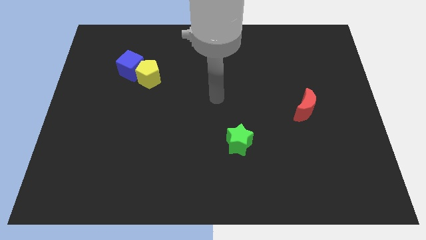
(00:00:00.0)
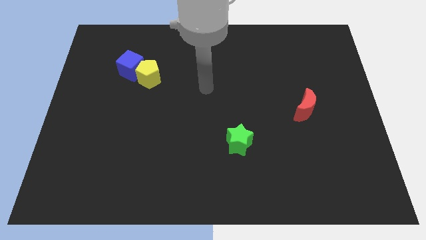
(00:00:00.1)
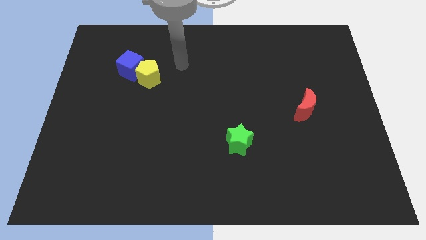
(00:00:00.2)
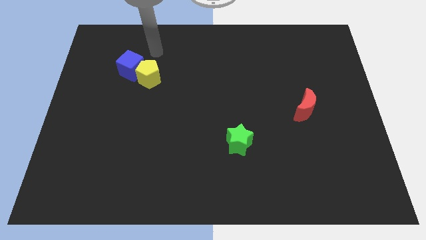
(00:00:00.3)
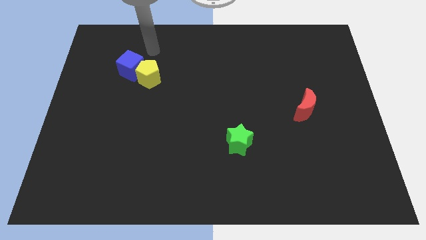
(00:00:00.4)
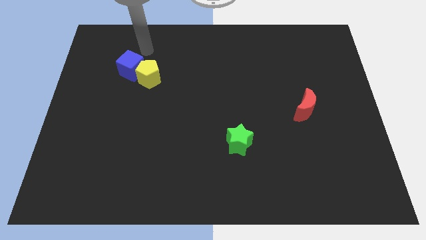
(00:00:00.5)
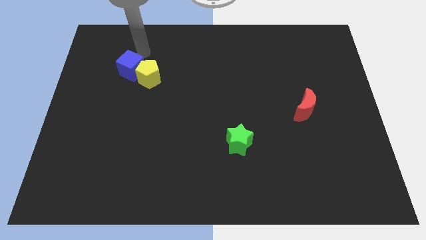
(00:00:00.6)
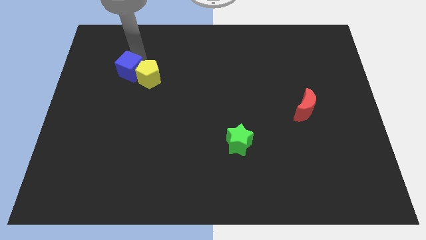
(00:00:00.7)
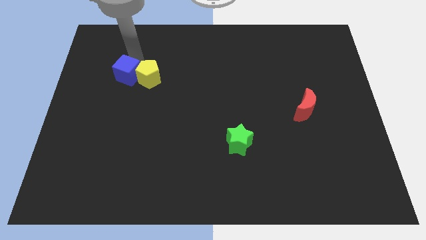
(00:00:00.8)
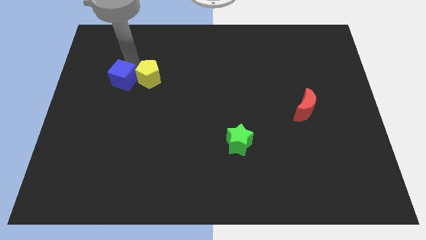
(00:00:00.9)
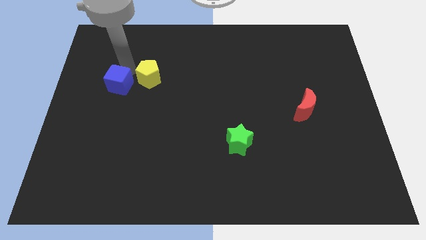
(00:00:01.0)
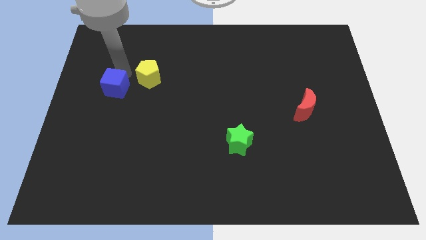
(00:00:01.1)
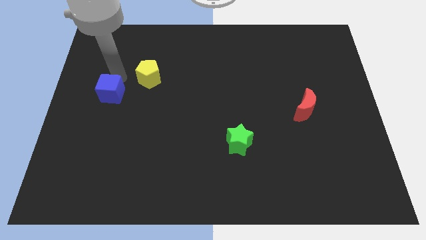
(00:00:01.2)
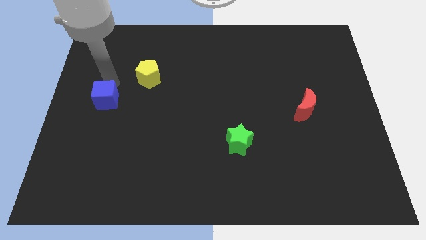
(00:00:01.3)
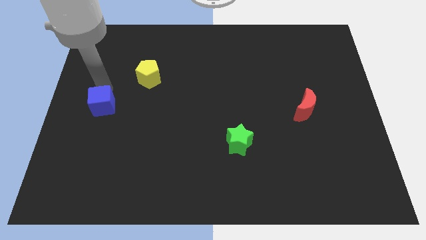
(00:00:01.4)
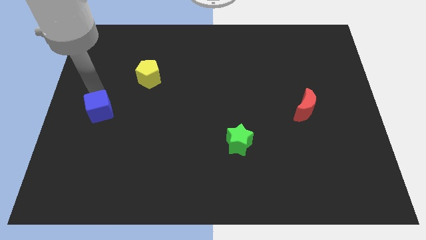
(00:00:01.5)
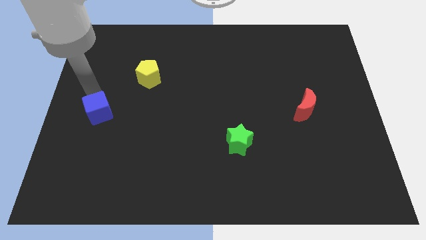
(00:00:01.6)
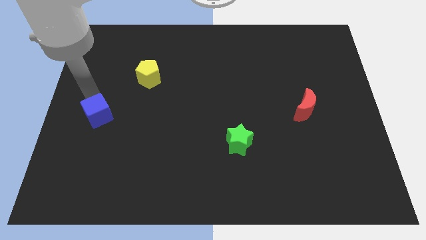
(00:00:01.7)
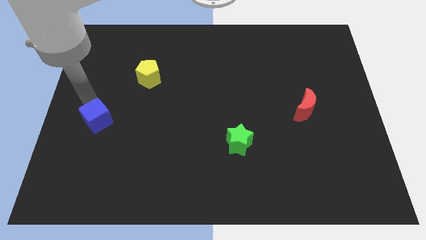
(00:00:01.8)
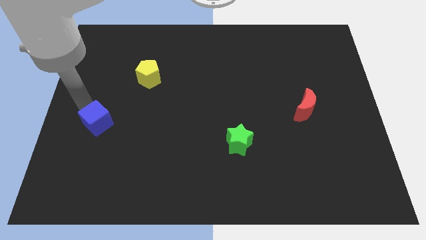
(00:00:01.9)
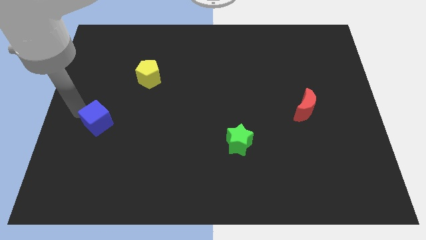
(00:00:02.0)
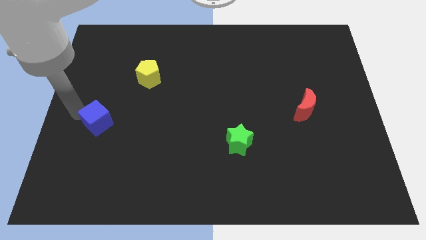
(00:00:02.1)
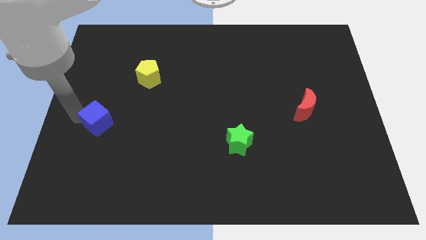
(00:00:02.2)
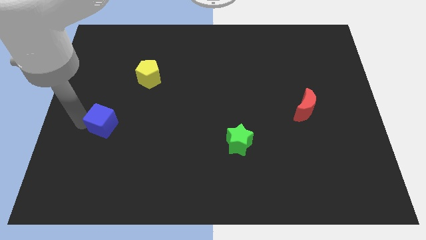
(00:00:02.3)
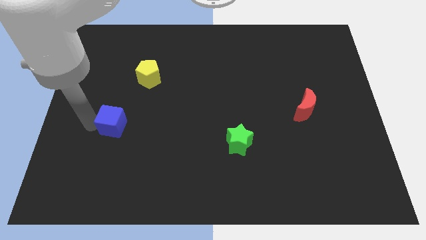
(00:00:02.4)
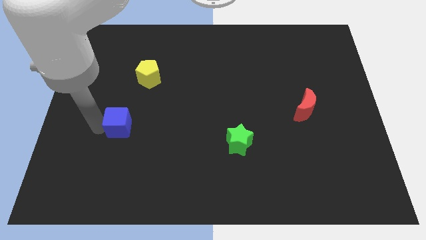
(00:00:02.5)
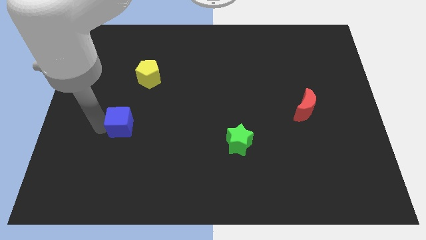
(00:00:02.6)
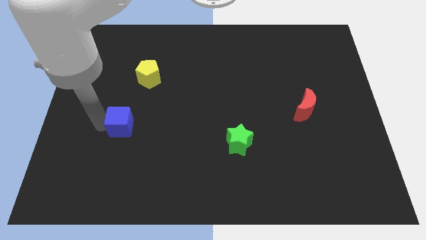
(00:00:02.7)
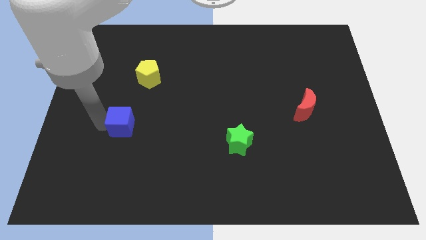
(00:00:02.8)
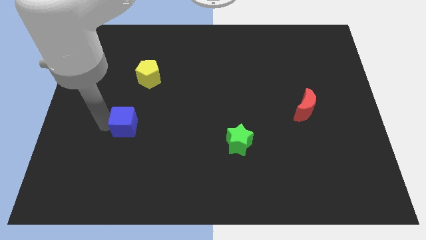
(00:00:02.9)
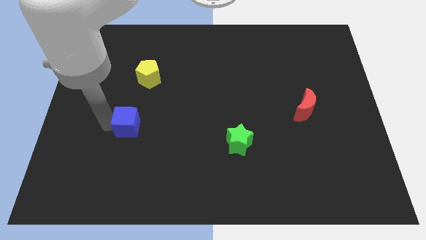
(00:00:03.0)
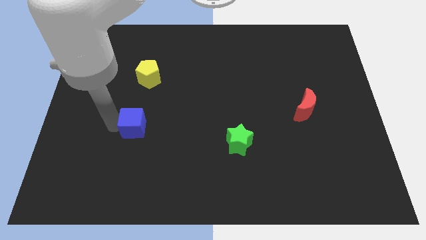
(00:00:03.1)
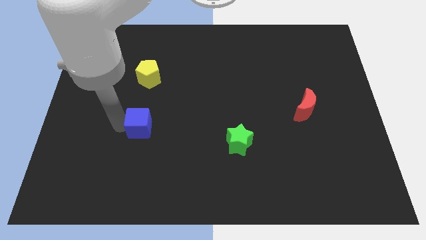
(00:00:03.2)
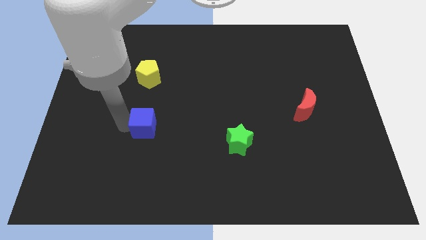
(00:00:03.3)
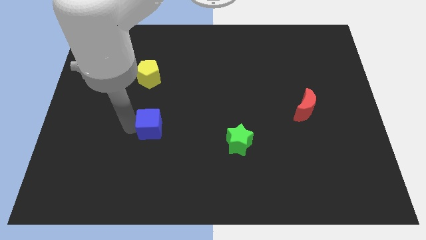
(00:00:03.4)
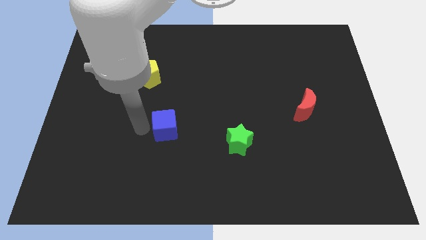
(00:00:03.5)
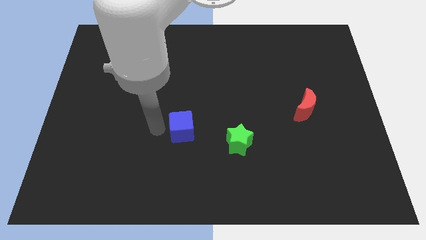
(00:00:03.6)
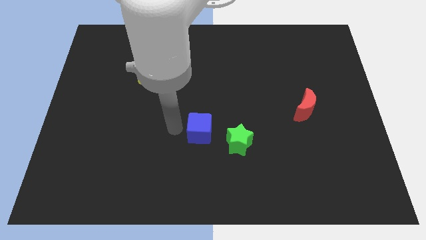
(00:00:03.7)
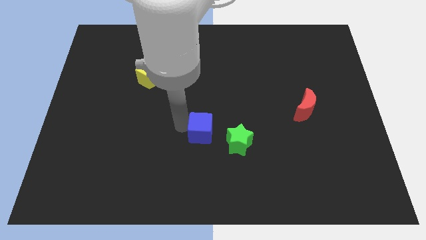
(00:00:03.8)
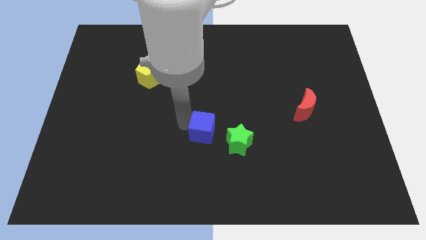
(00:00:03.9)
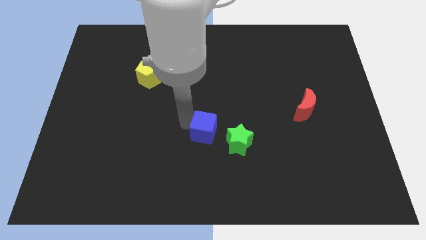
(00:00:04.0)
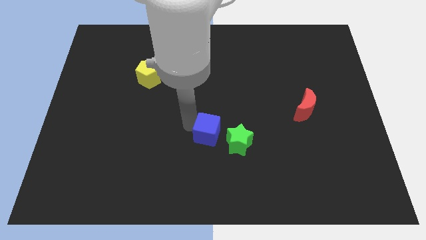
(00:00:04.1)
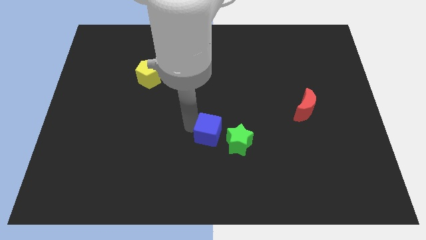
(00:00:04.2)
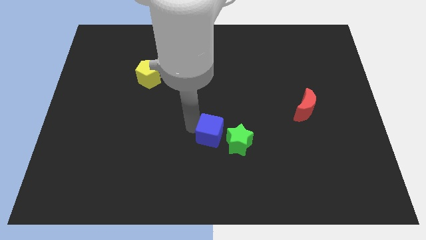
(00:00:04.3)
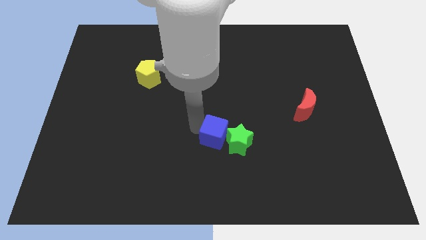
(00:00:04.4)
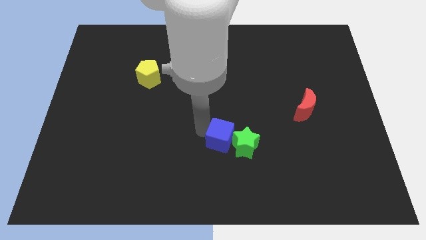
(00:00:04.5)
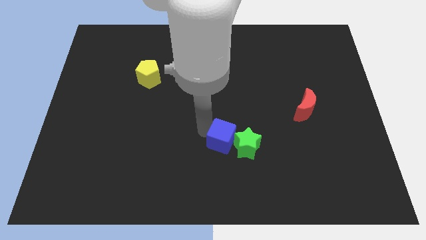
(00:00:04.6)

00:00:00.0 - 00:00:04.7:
move the blue cube close to the star

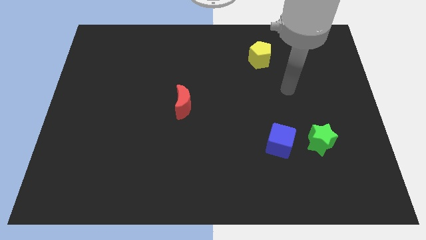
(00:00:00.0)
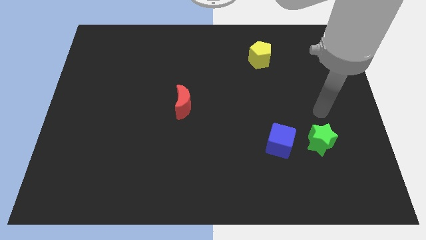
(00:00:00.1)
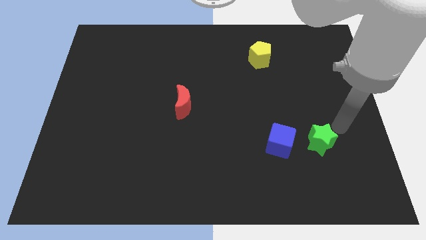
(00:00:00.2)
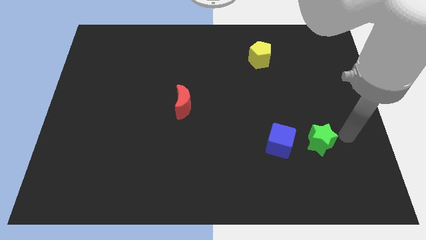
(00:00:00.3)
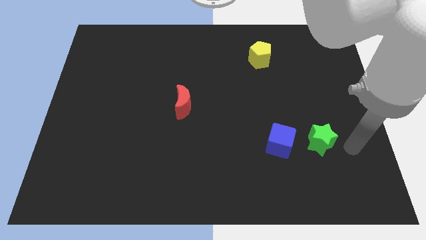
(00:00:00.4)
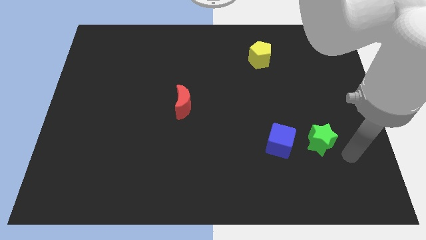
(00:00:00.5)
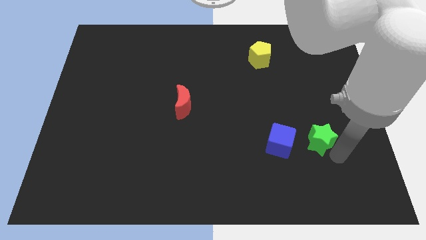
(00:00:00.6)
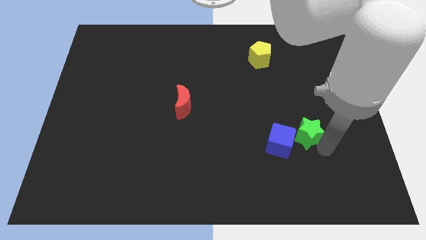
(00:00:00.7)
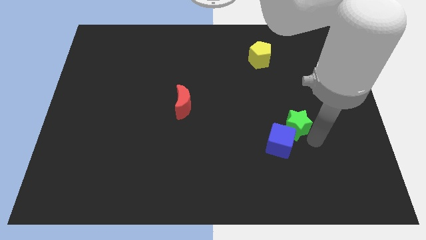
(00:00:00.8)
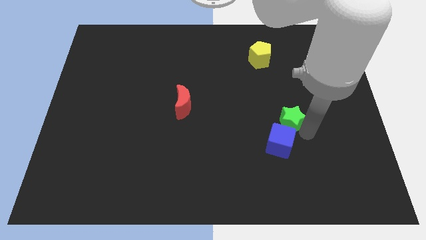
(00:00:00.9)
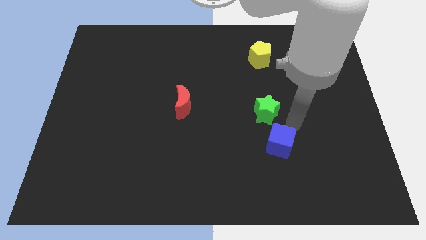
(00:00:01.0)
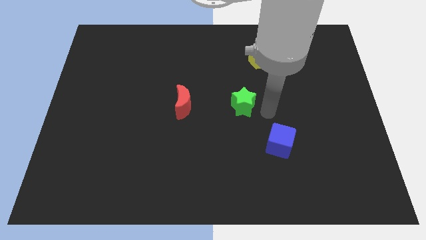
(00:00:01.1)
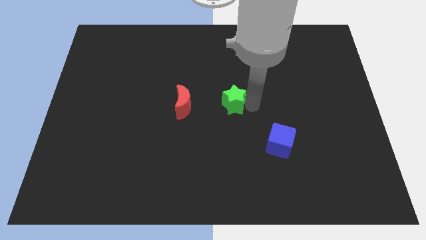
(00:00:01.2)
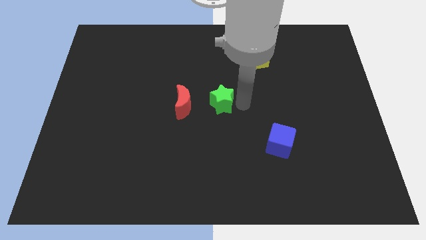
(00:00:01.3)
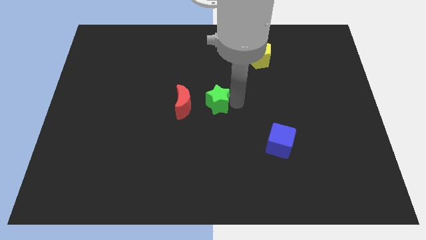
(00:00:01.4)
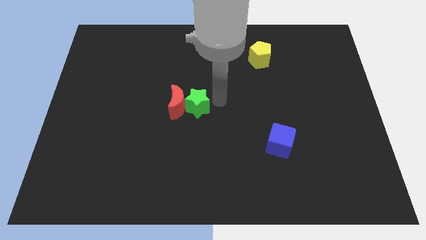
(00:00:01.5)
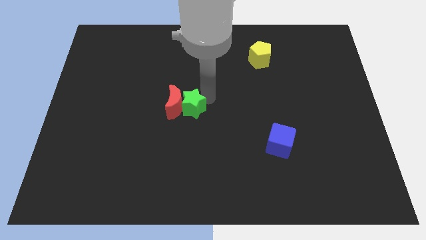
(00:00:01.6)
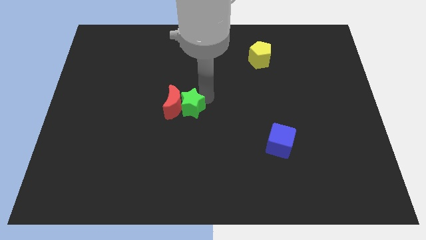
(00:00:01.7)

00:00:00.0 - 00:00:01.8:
push the green block close to the red block

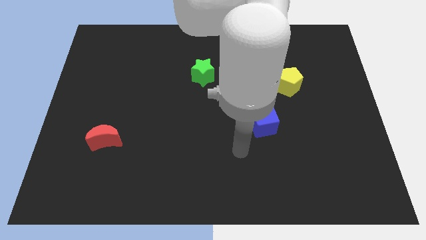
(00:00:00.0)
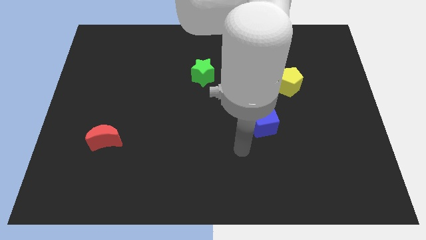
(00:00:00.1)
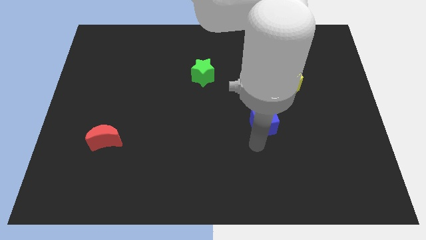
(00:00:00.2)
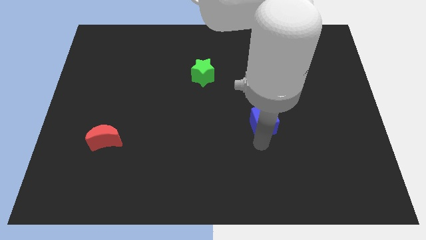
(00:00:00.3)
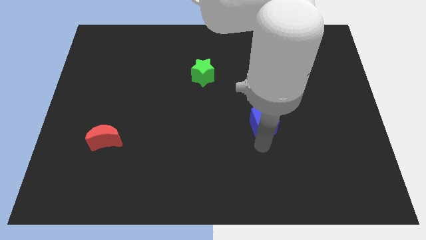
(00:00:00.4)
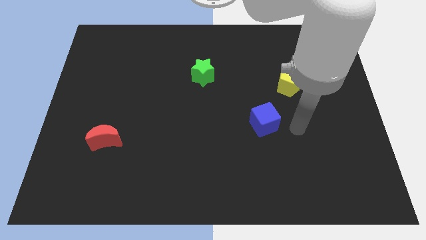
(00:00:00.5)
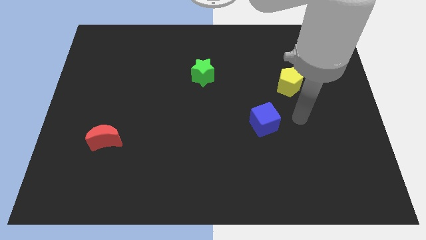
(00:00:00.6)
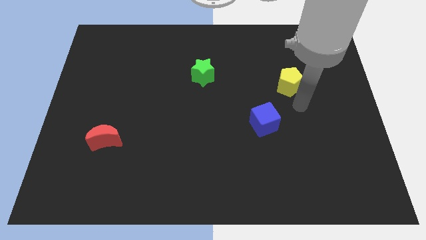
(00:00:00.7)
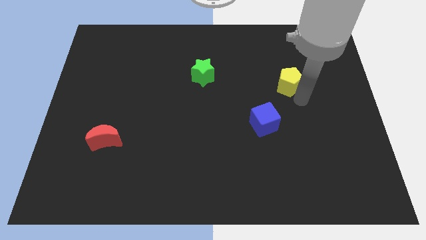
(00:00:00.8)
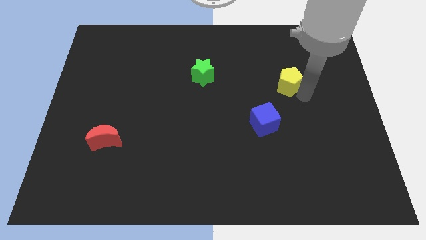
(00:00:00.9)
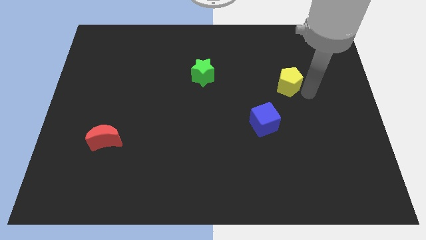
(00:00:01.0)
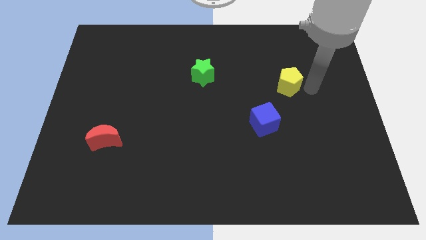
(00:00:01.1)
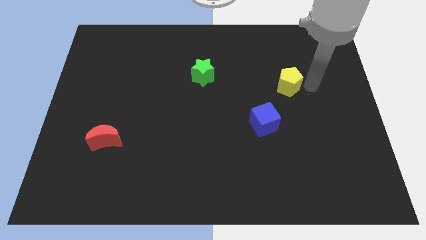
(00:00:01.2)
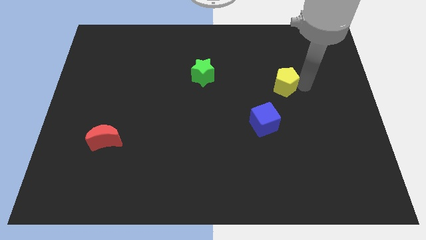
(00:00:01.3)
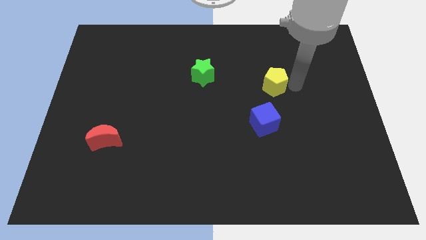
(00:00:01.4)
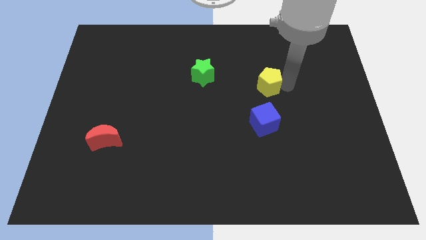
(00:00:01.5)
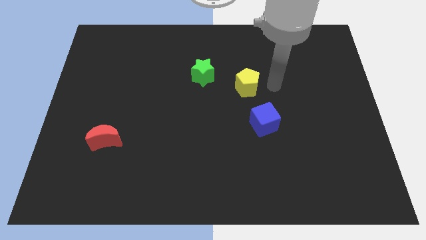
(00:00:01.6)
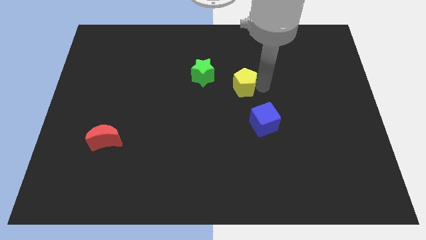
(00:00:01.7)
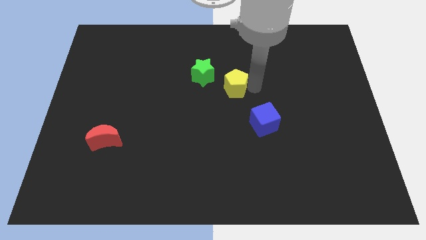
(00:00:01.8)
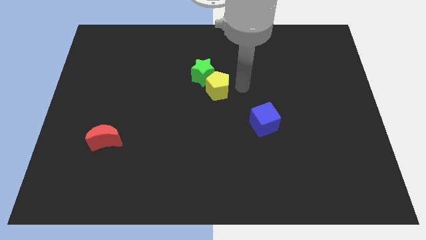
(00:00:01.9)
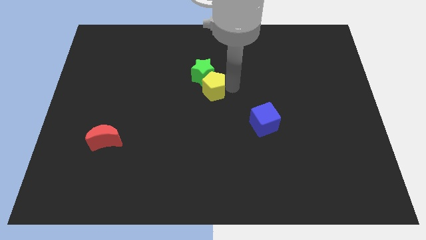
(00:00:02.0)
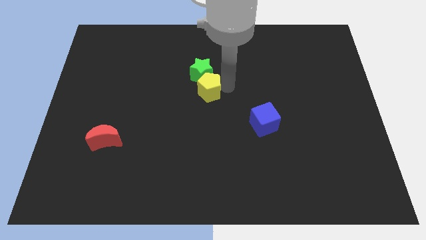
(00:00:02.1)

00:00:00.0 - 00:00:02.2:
move the yellow pentagon to the green block

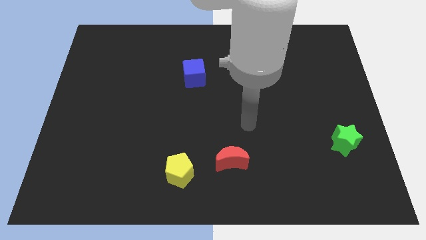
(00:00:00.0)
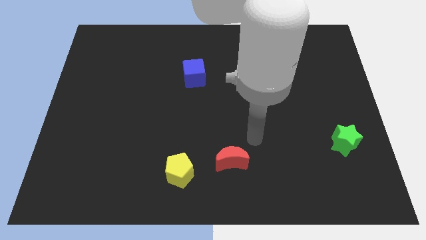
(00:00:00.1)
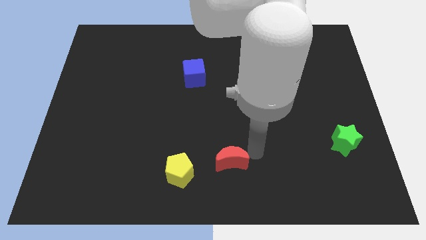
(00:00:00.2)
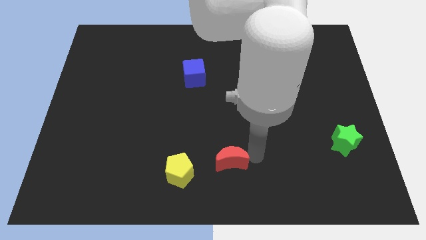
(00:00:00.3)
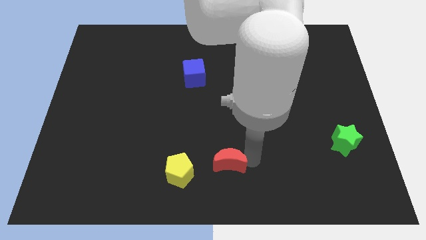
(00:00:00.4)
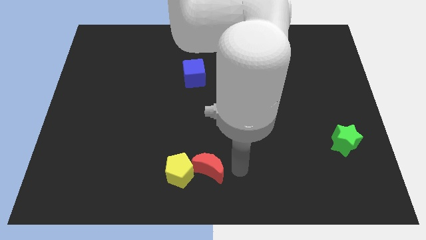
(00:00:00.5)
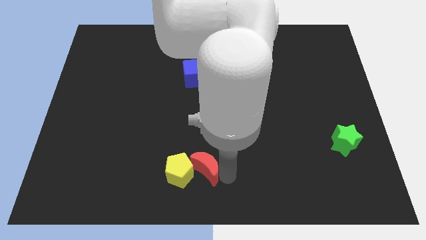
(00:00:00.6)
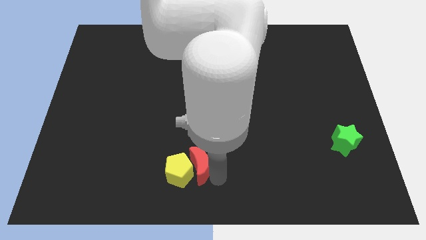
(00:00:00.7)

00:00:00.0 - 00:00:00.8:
move the red block to the yellow pentagon
